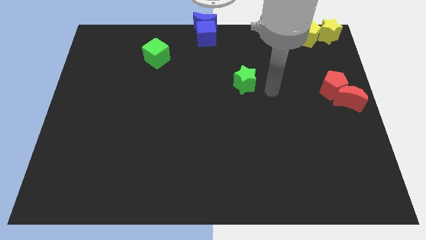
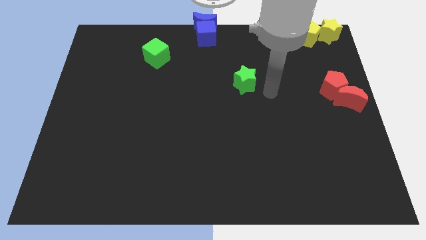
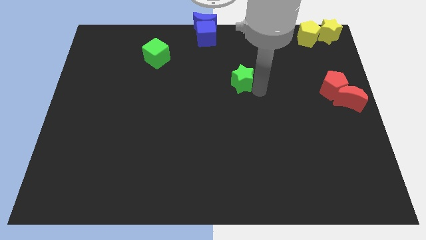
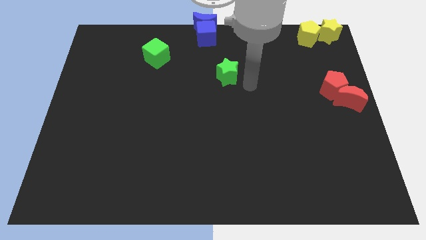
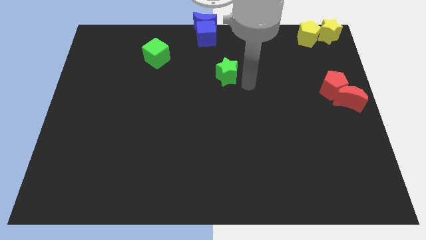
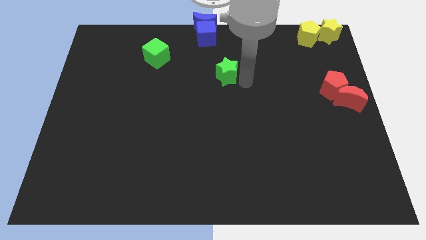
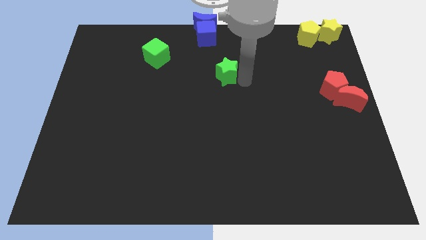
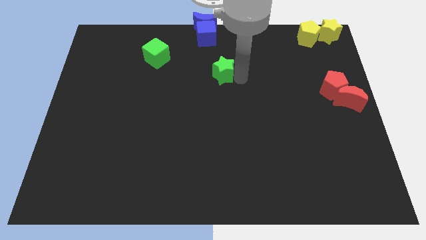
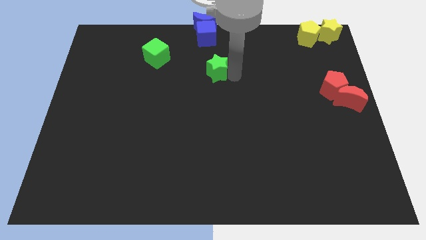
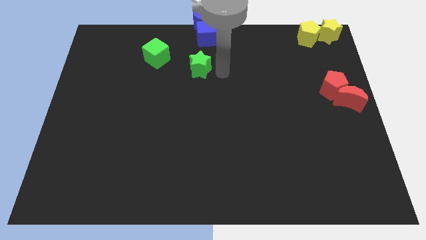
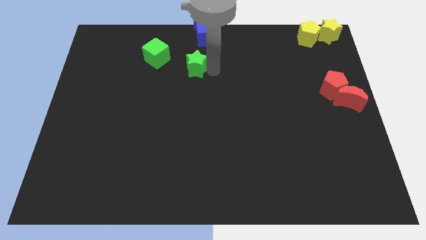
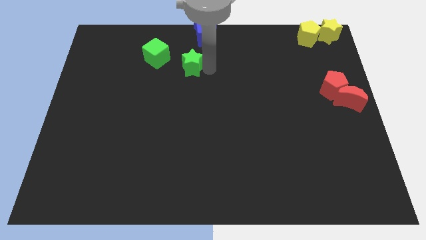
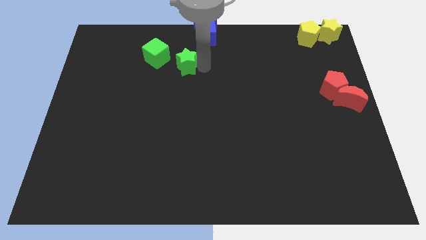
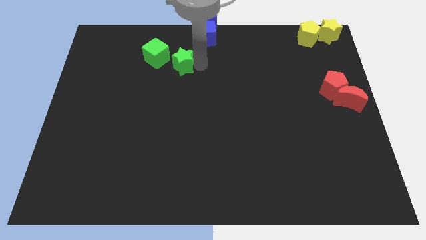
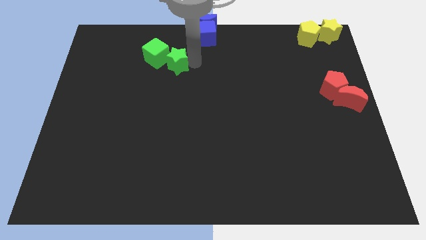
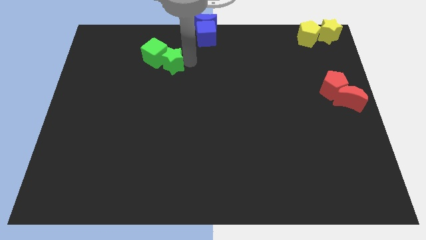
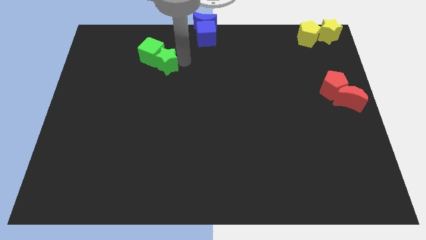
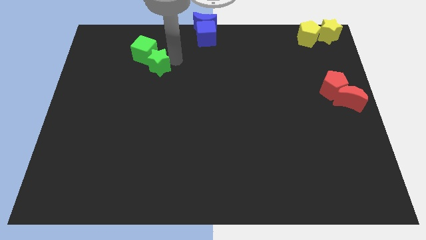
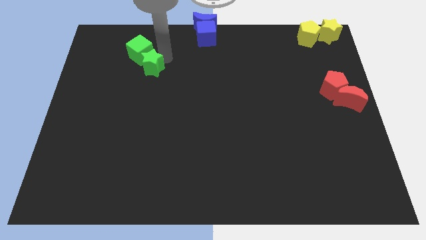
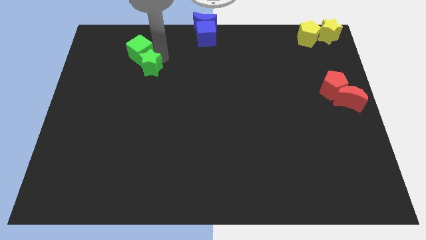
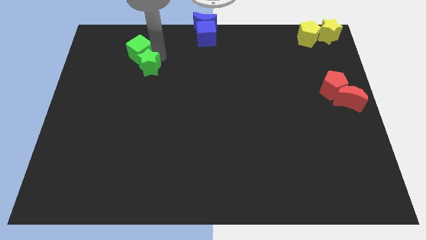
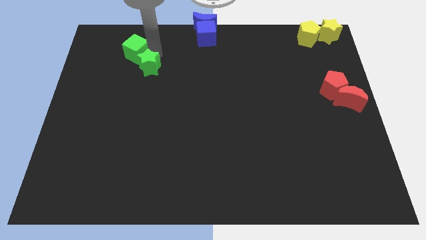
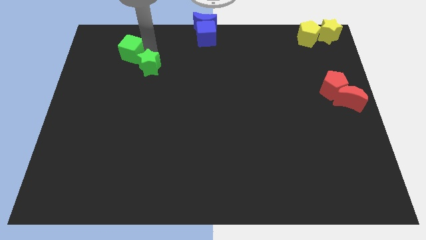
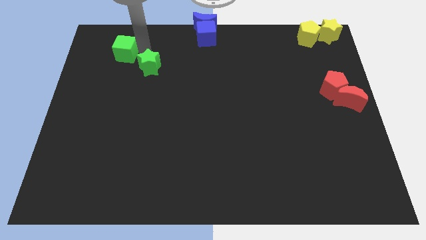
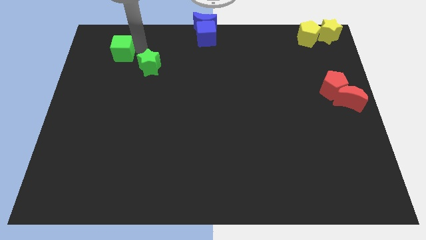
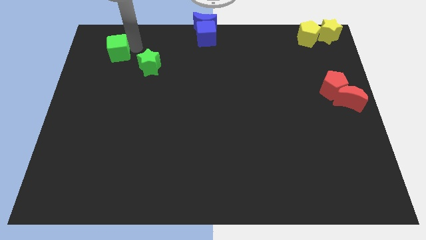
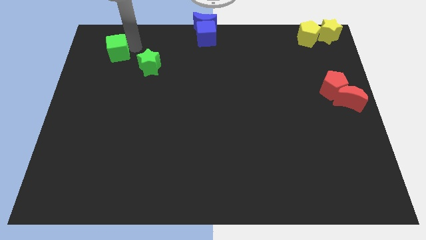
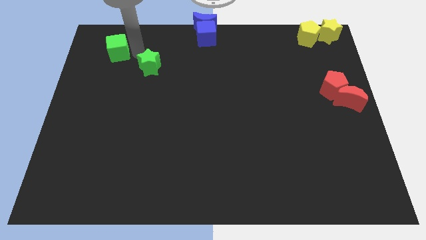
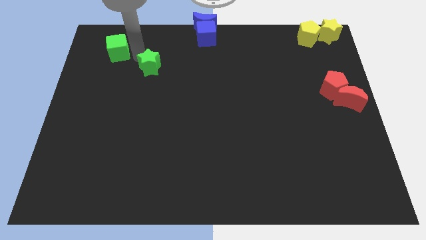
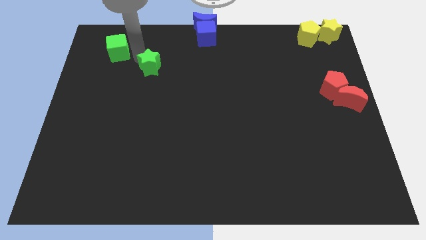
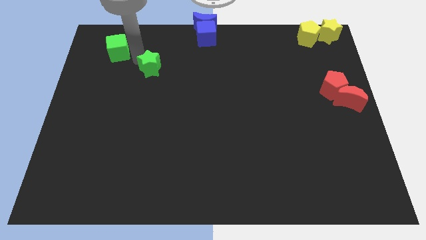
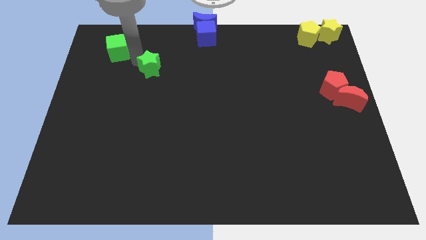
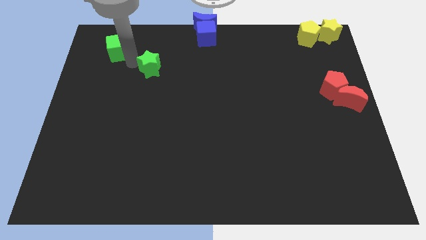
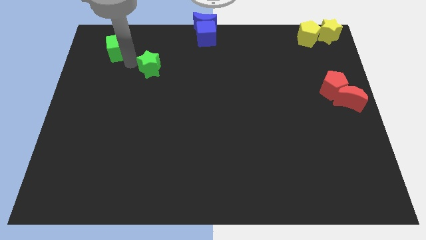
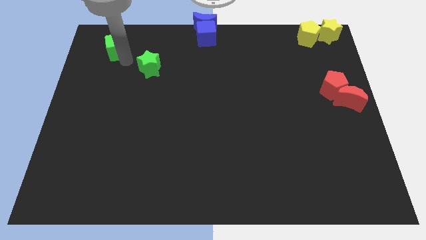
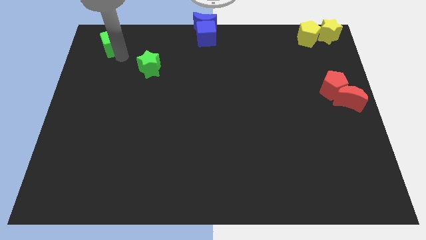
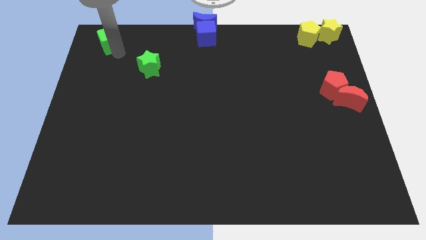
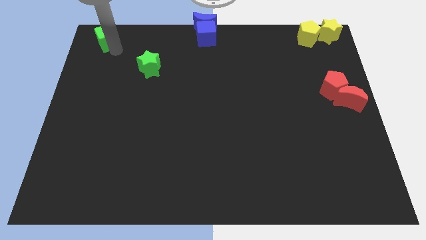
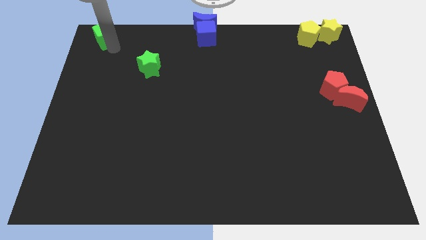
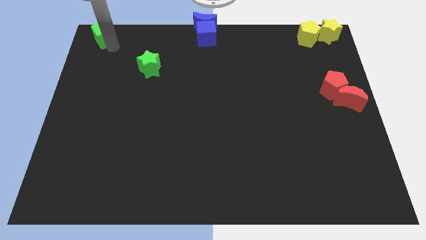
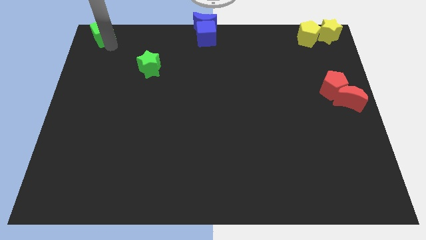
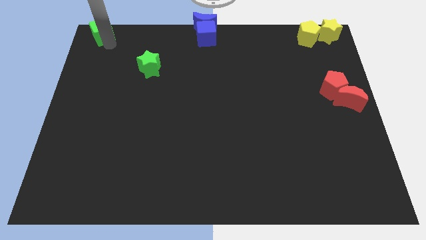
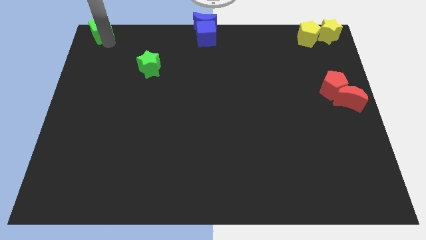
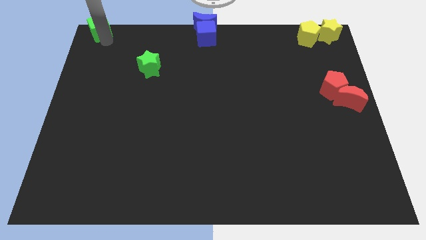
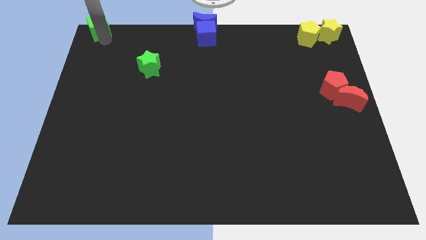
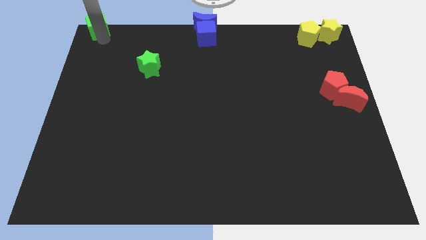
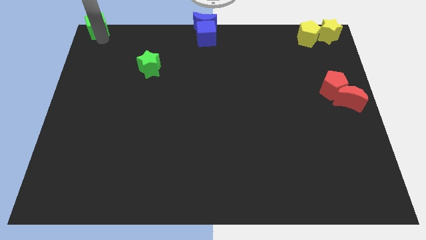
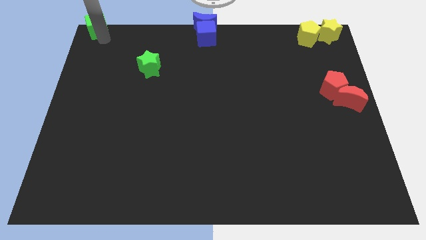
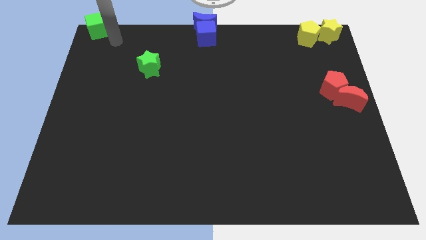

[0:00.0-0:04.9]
slide the green cube to top left side

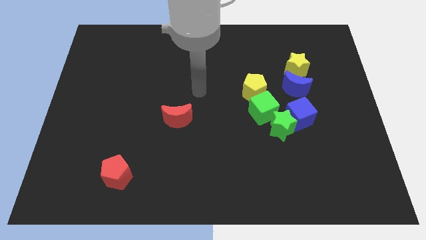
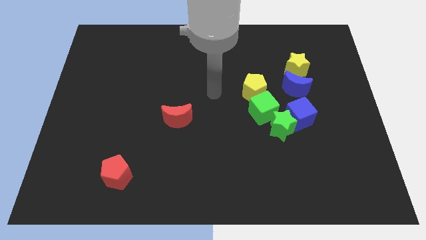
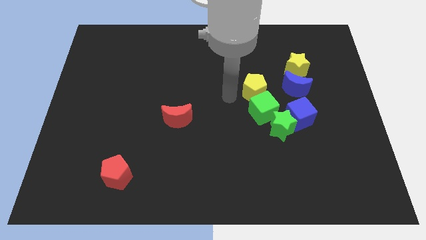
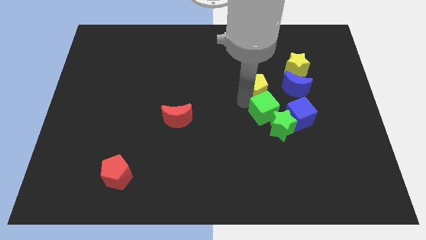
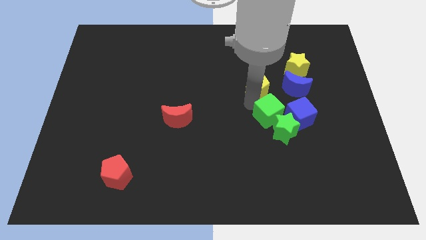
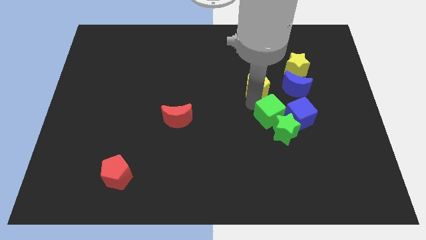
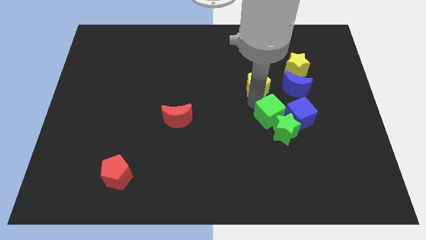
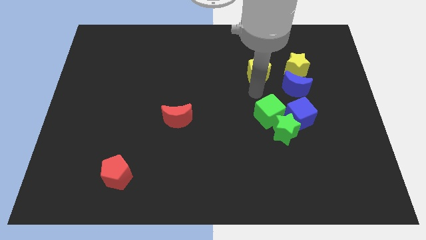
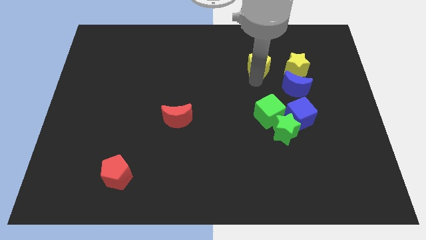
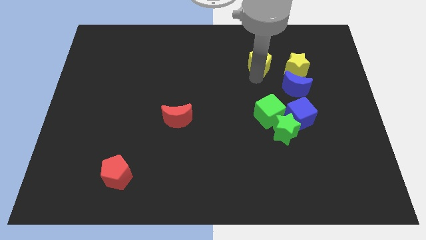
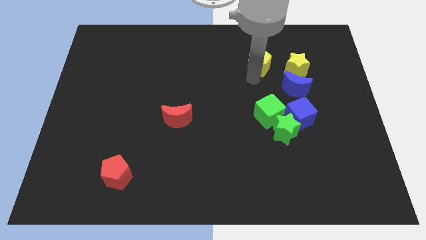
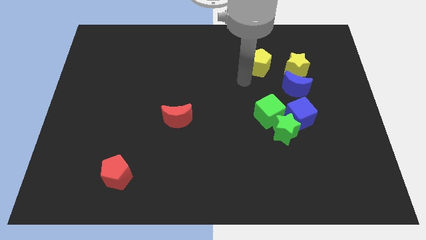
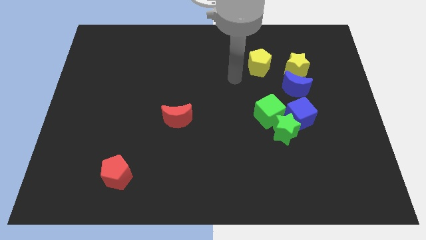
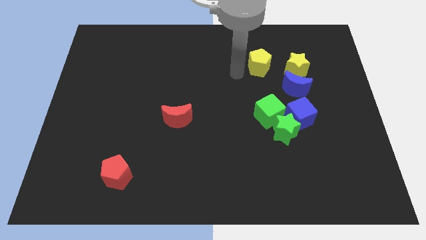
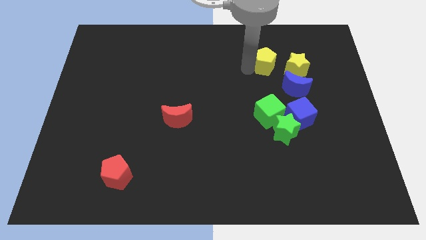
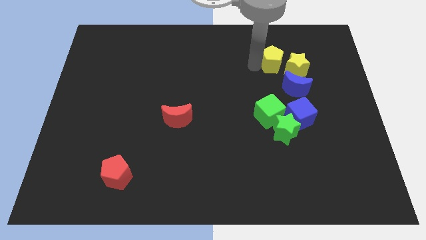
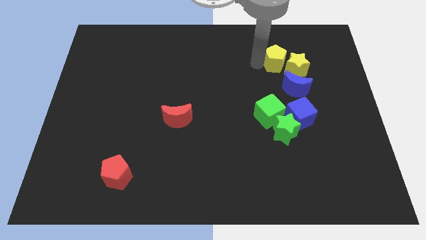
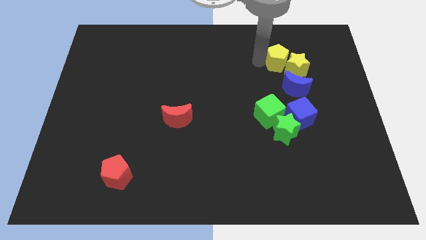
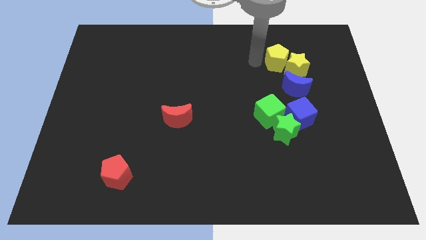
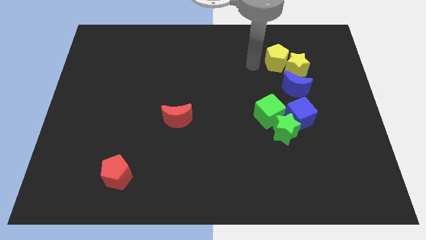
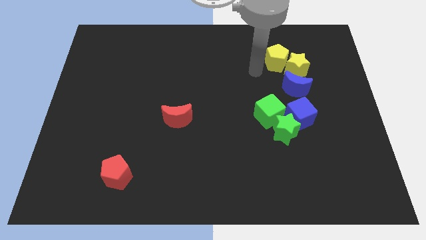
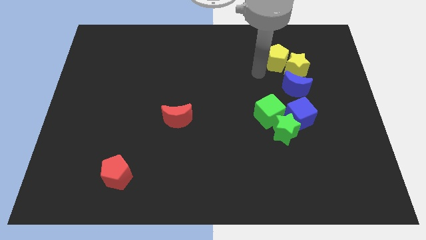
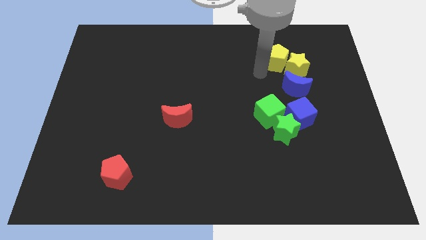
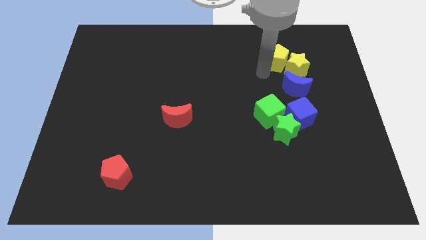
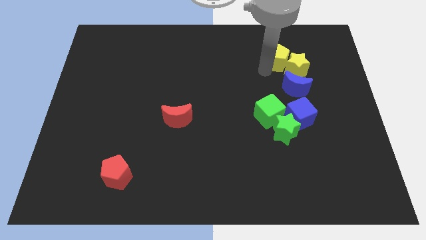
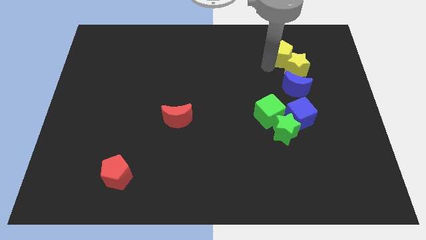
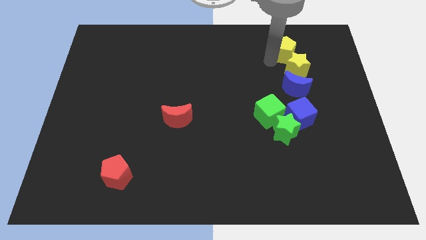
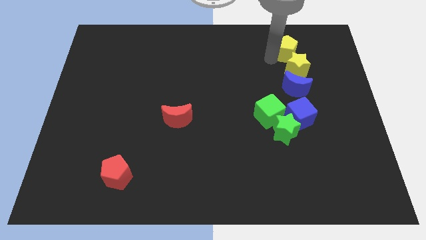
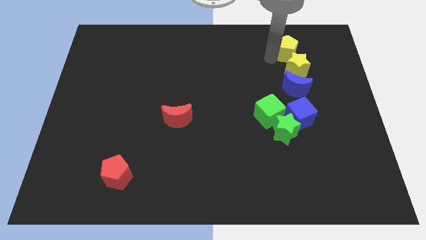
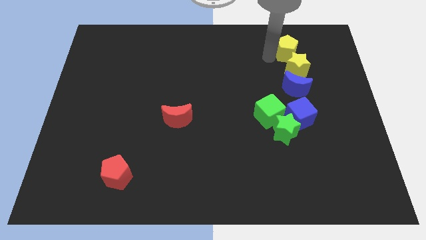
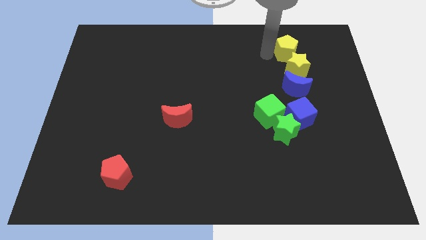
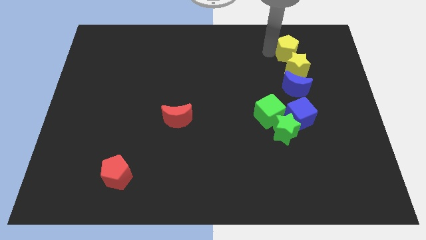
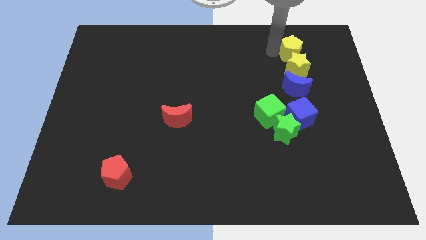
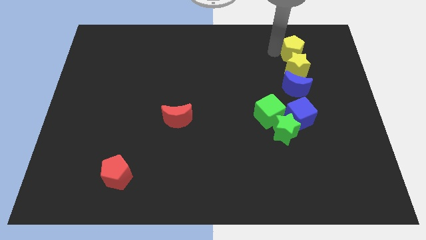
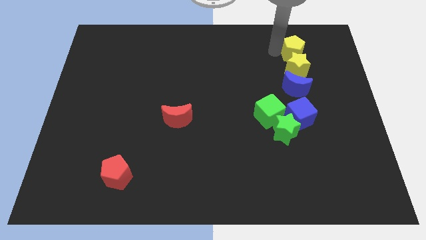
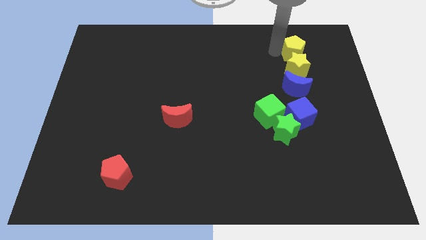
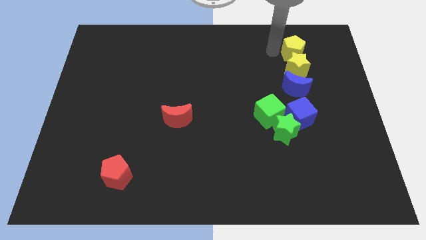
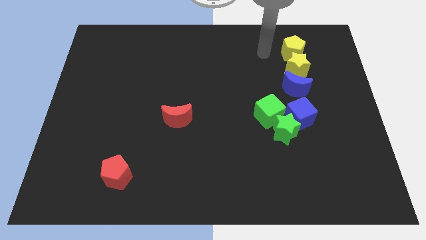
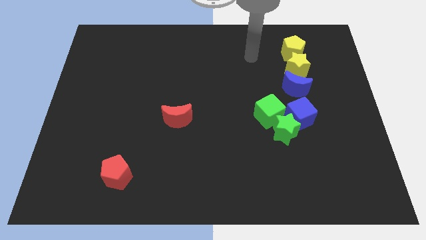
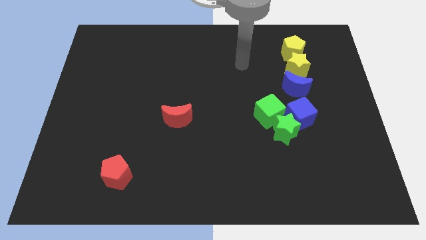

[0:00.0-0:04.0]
push the yellow pentagon above the yellow star
